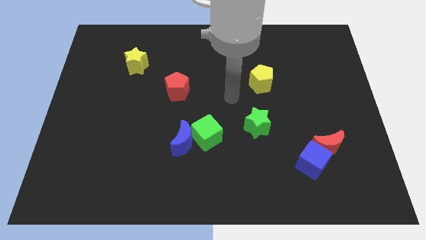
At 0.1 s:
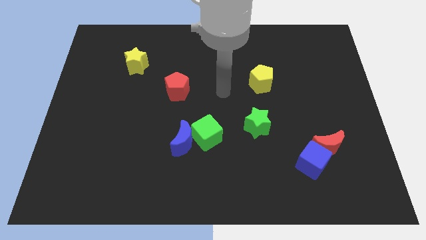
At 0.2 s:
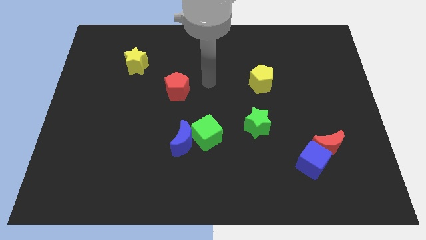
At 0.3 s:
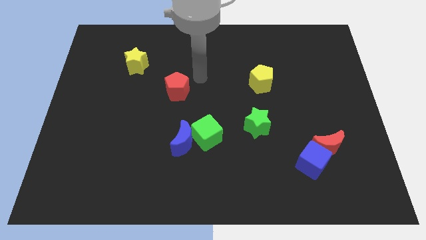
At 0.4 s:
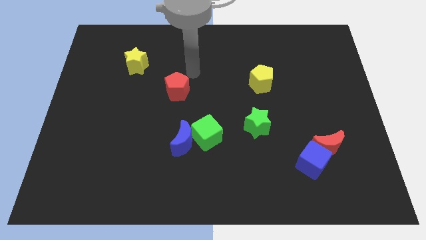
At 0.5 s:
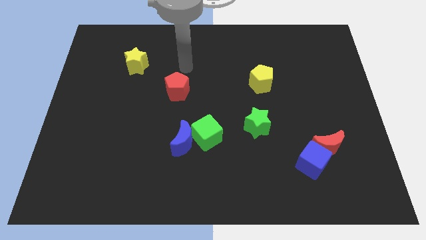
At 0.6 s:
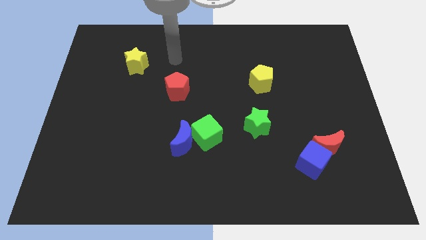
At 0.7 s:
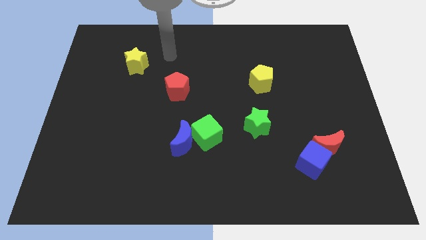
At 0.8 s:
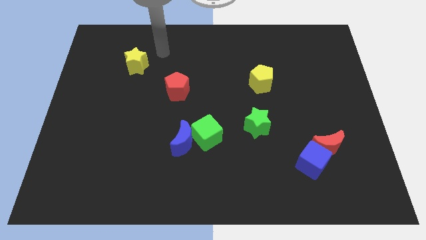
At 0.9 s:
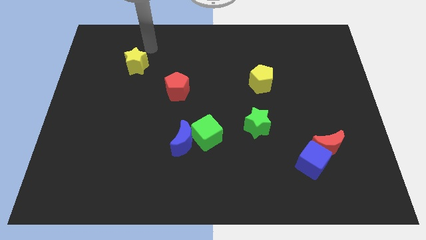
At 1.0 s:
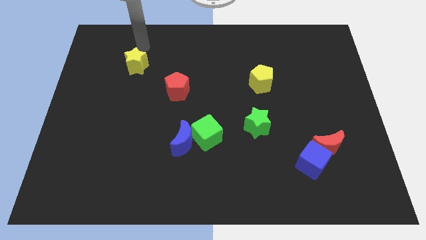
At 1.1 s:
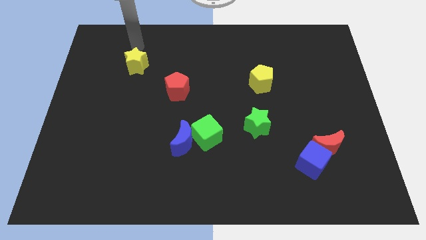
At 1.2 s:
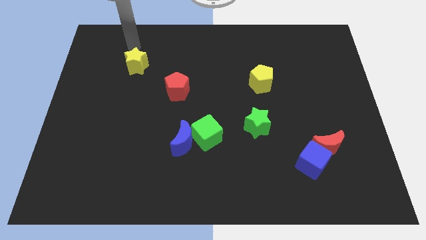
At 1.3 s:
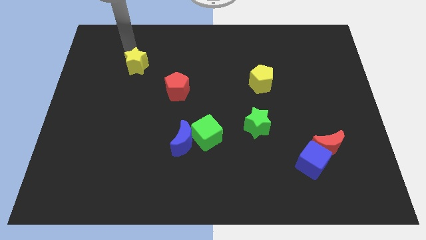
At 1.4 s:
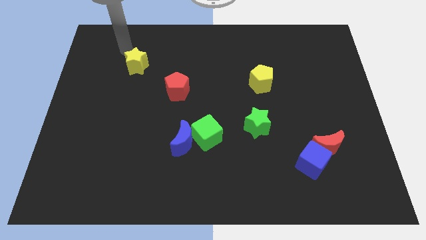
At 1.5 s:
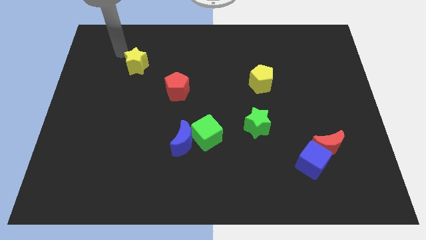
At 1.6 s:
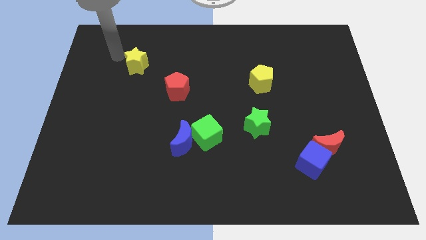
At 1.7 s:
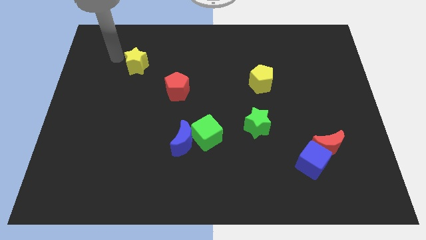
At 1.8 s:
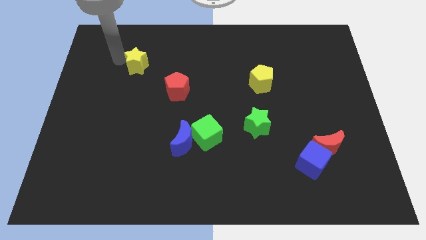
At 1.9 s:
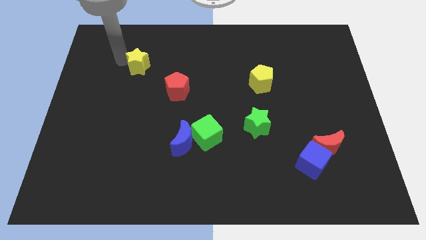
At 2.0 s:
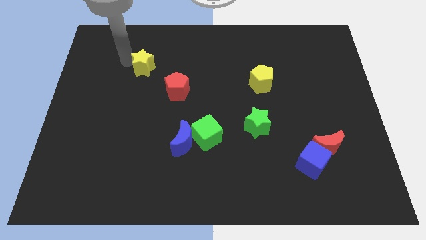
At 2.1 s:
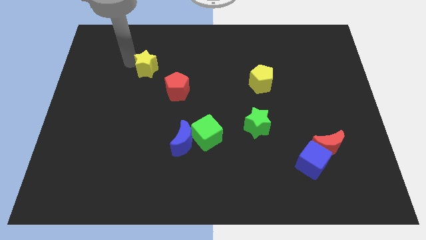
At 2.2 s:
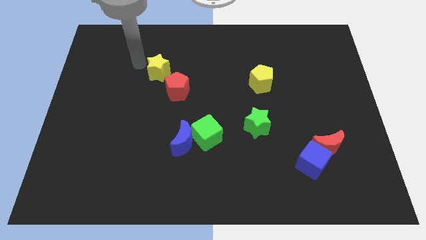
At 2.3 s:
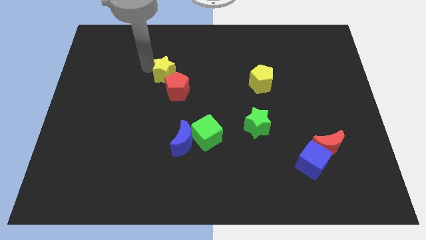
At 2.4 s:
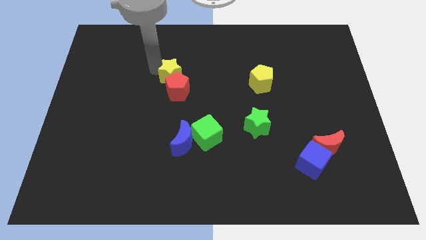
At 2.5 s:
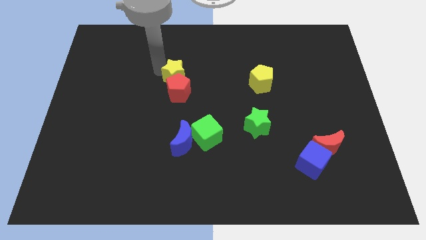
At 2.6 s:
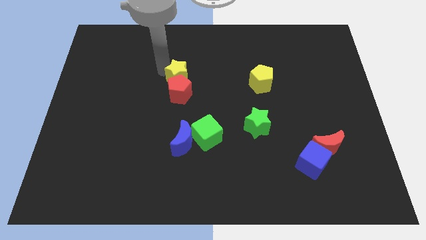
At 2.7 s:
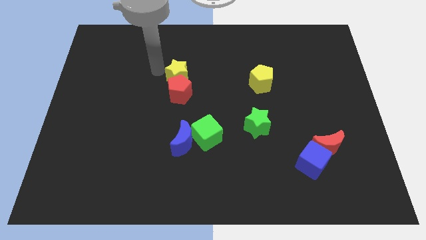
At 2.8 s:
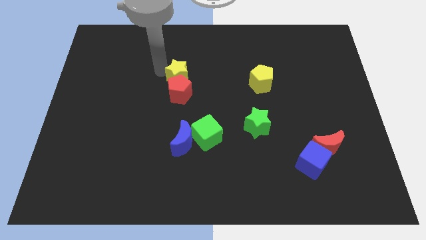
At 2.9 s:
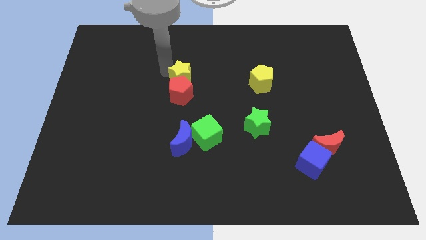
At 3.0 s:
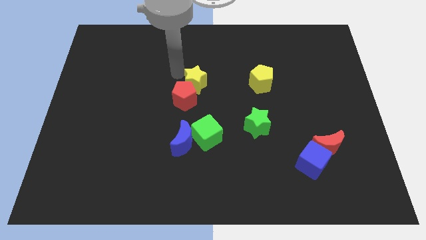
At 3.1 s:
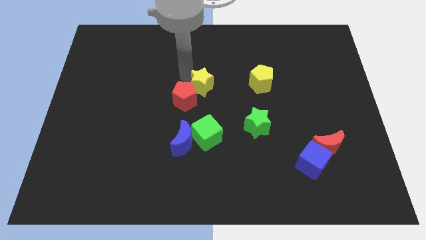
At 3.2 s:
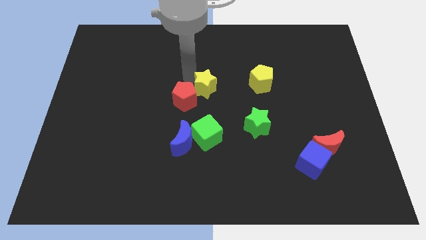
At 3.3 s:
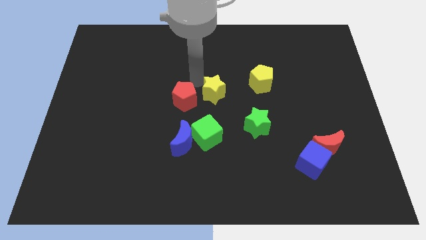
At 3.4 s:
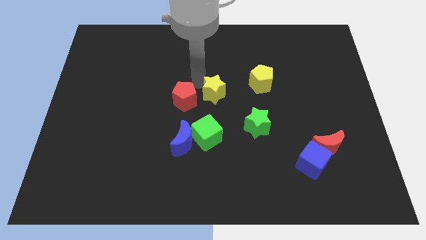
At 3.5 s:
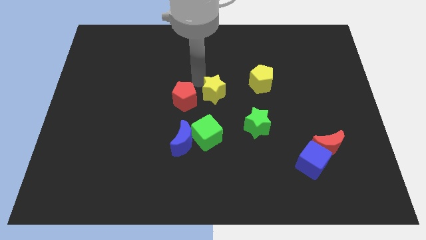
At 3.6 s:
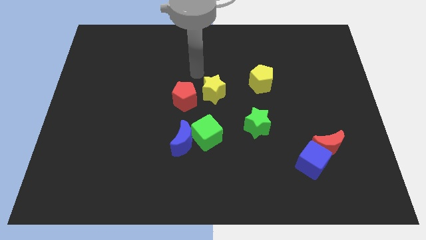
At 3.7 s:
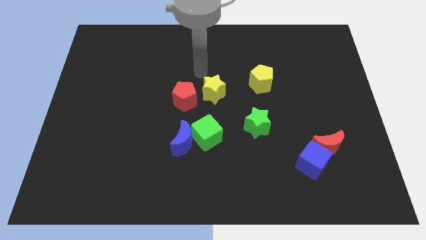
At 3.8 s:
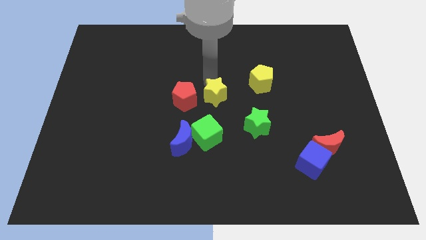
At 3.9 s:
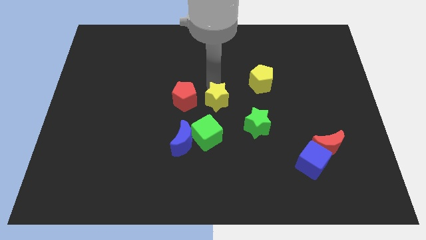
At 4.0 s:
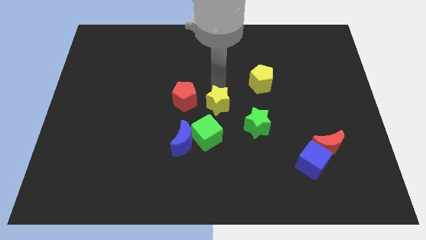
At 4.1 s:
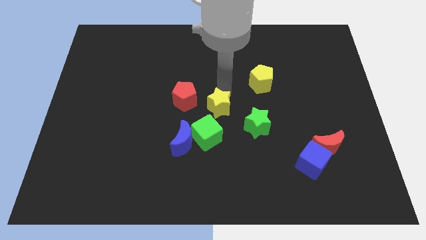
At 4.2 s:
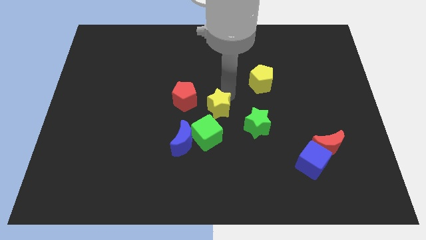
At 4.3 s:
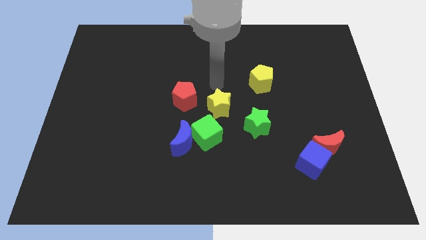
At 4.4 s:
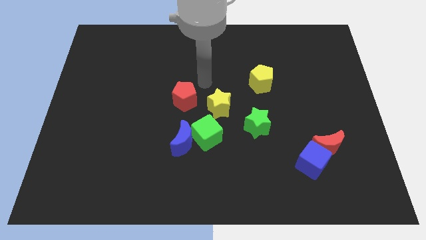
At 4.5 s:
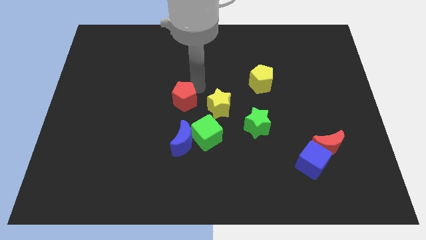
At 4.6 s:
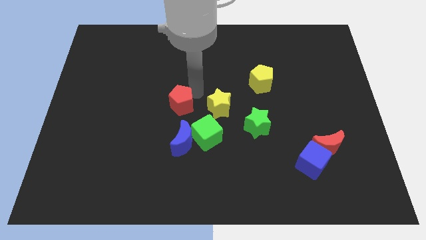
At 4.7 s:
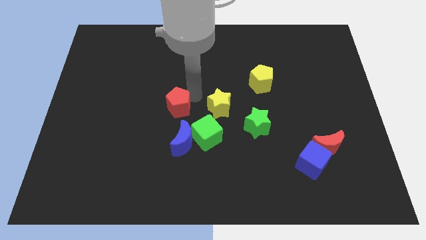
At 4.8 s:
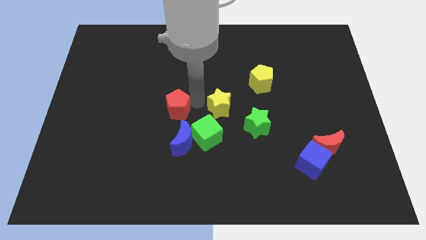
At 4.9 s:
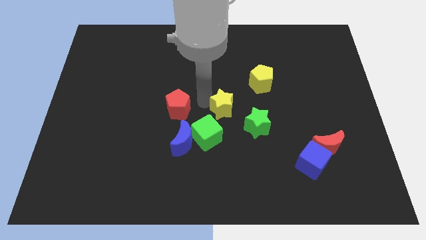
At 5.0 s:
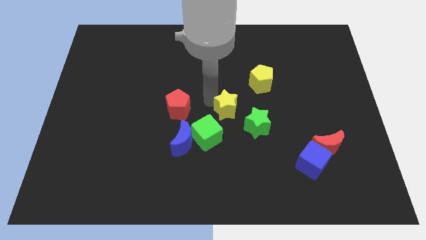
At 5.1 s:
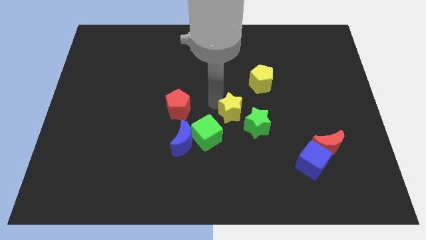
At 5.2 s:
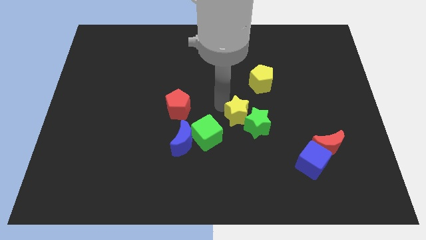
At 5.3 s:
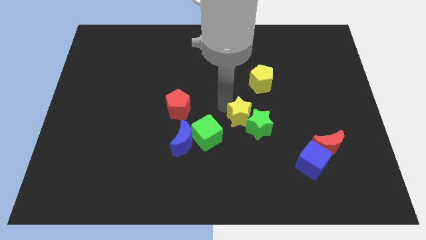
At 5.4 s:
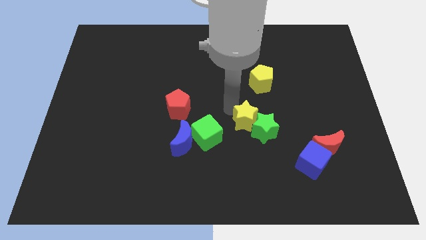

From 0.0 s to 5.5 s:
slide the yellow star to the green star

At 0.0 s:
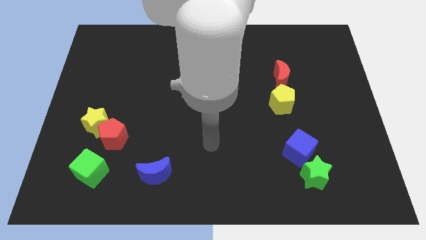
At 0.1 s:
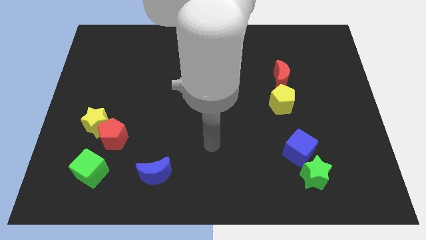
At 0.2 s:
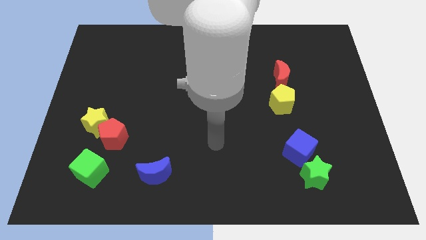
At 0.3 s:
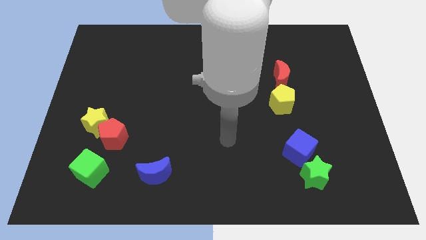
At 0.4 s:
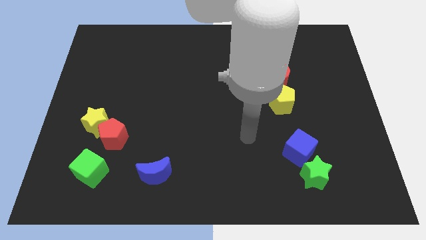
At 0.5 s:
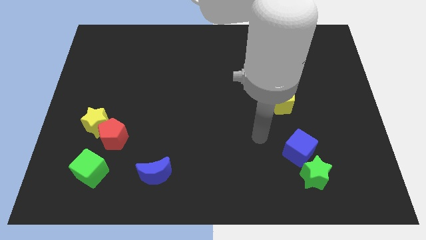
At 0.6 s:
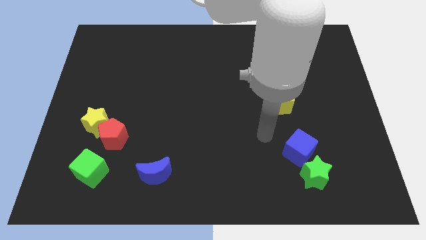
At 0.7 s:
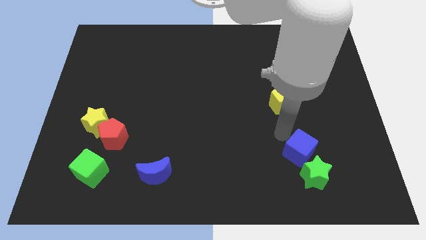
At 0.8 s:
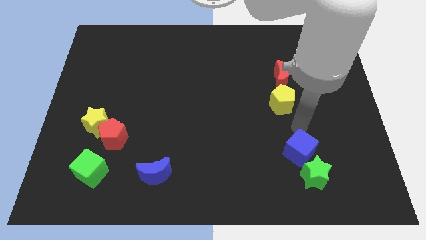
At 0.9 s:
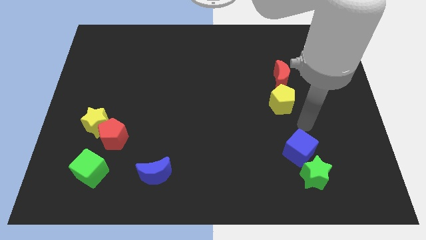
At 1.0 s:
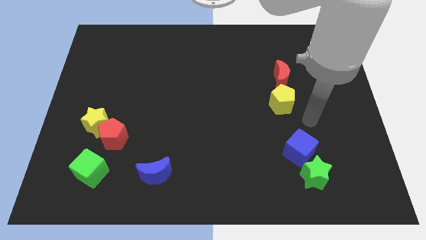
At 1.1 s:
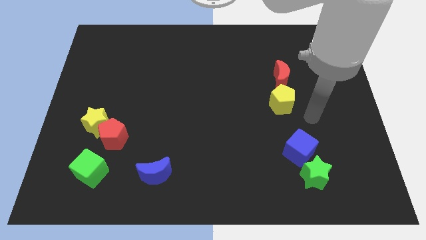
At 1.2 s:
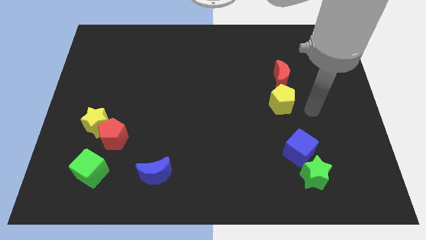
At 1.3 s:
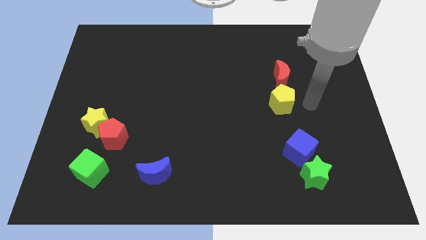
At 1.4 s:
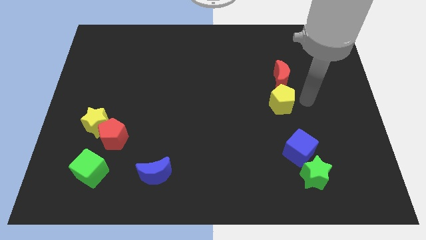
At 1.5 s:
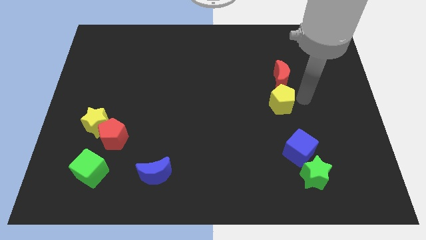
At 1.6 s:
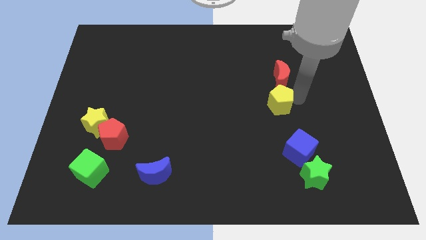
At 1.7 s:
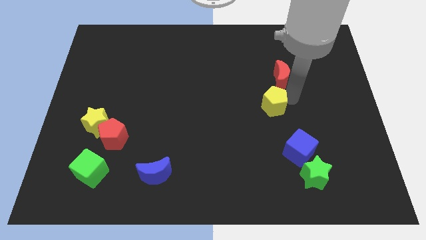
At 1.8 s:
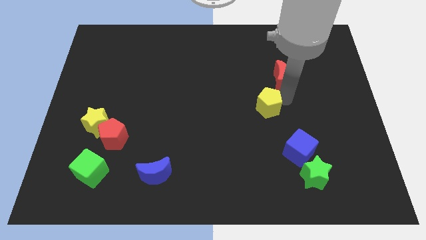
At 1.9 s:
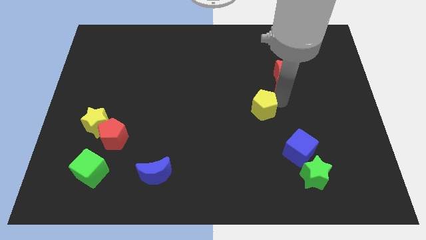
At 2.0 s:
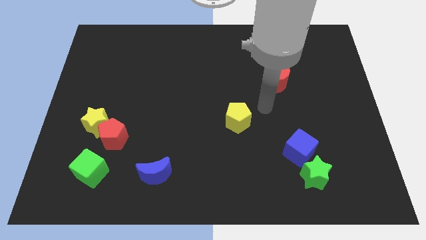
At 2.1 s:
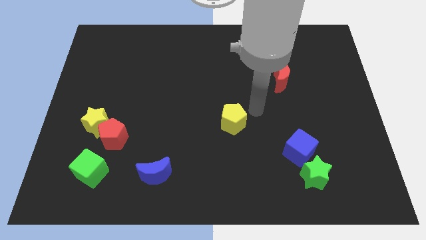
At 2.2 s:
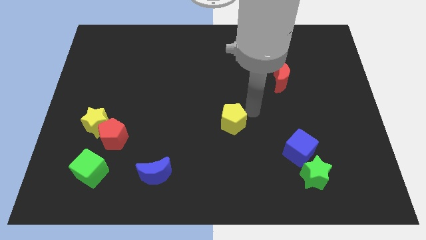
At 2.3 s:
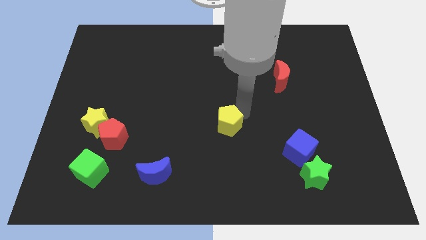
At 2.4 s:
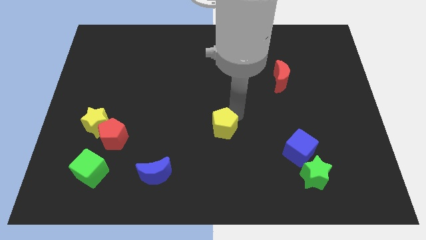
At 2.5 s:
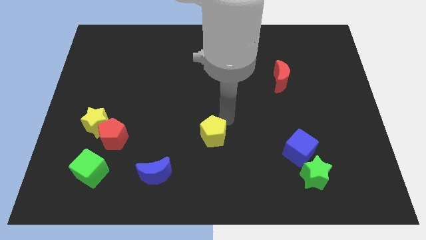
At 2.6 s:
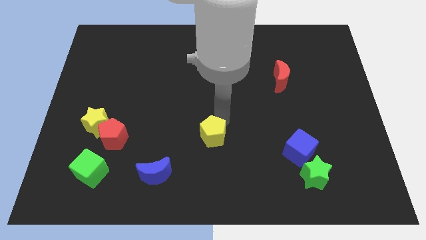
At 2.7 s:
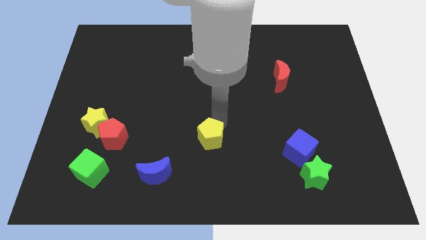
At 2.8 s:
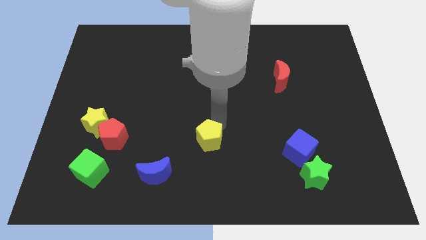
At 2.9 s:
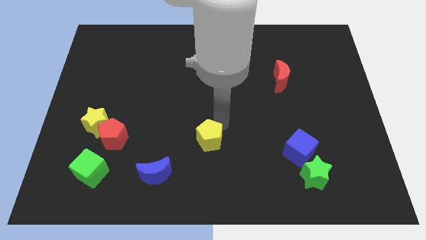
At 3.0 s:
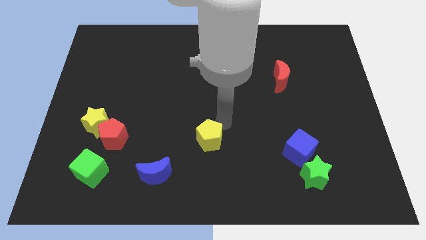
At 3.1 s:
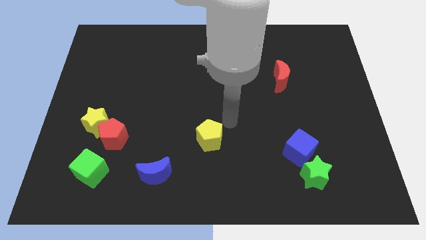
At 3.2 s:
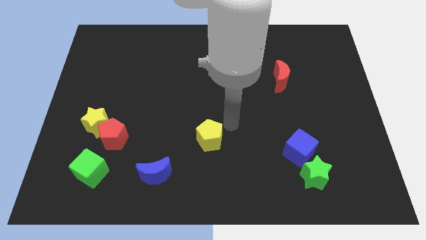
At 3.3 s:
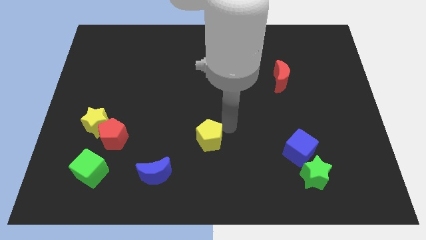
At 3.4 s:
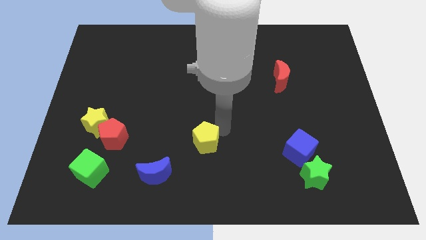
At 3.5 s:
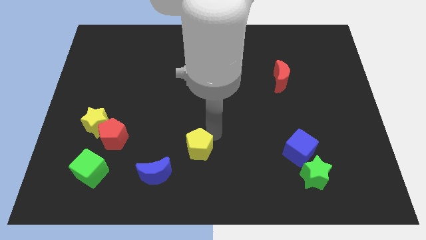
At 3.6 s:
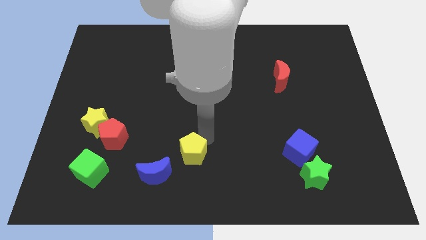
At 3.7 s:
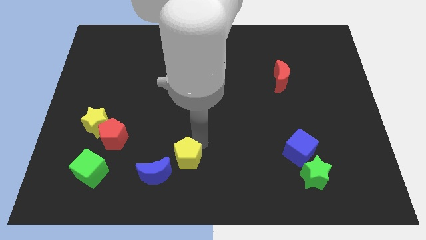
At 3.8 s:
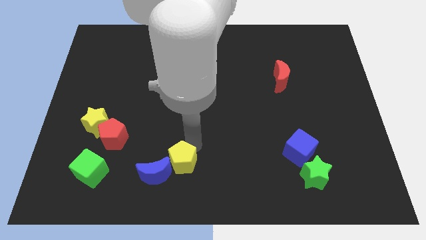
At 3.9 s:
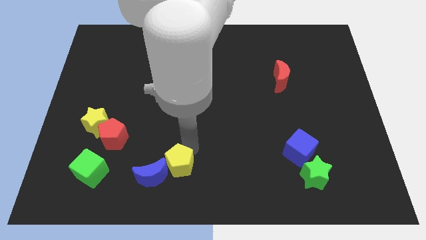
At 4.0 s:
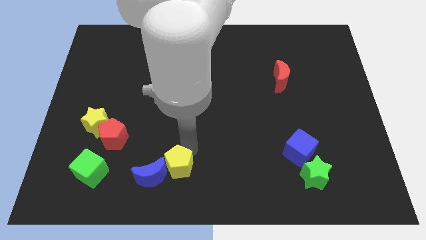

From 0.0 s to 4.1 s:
move the yellow pentagon close to the blue moon
